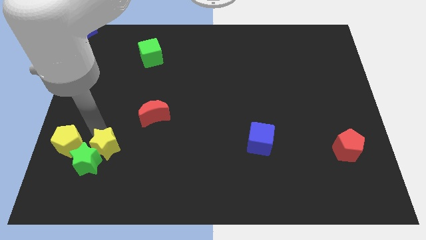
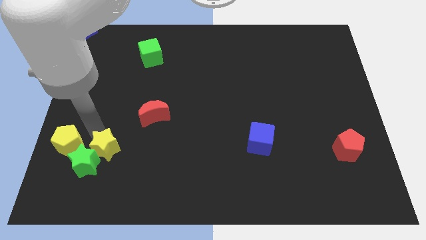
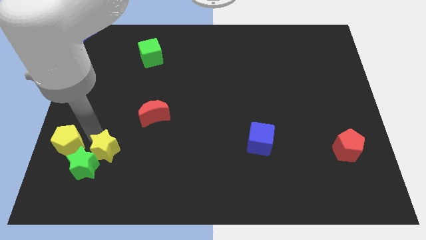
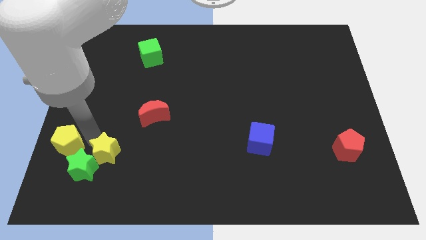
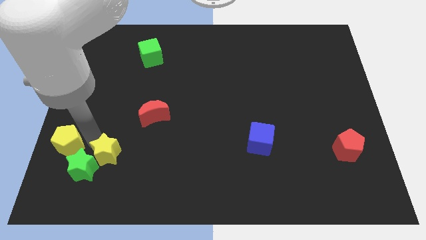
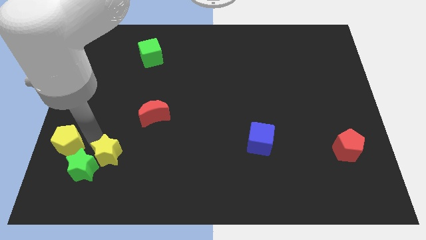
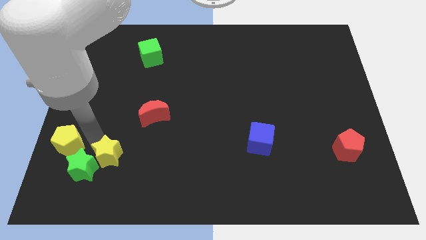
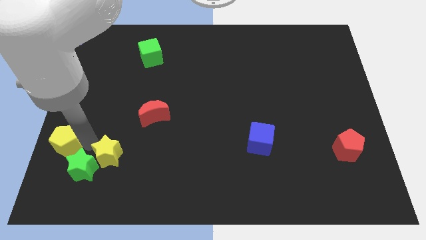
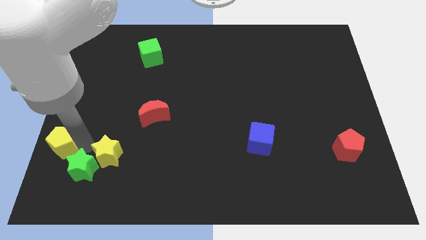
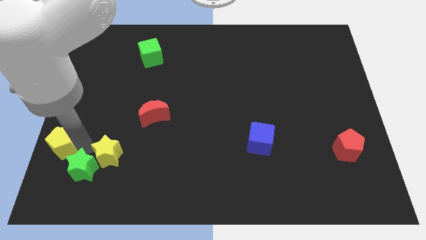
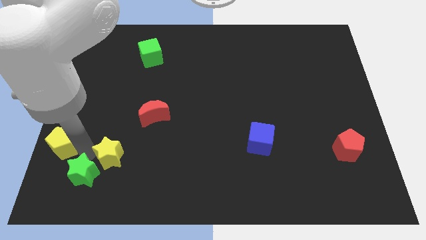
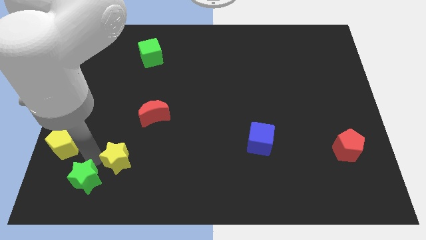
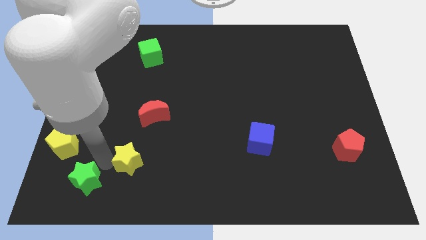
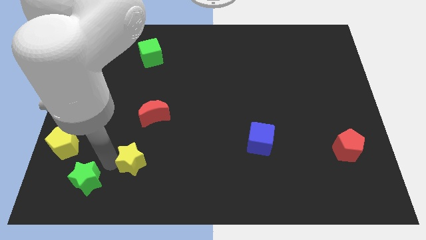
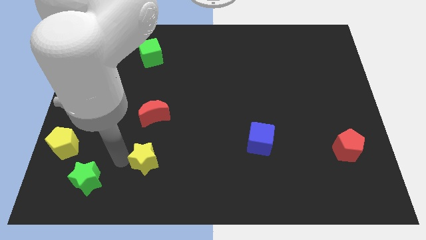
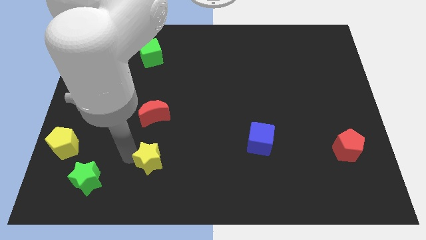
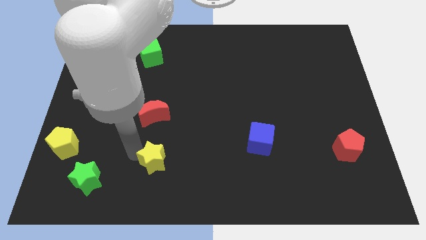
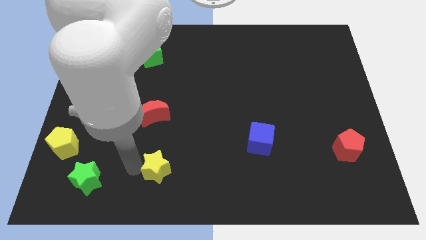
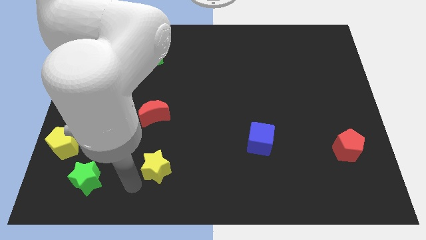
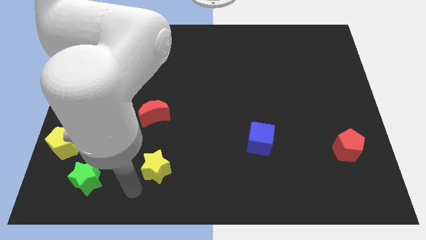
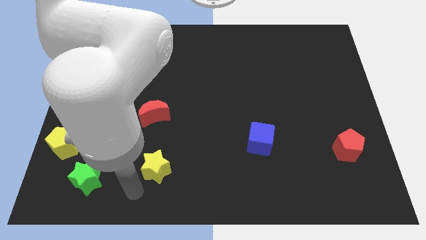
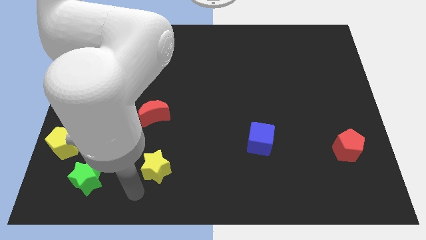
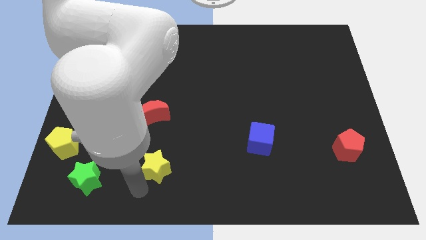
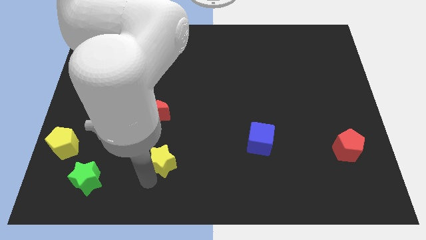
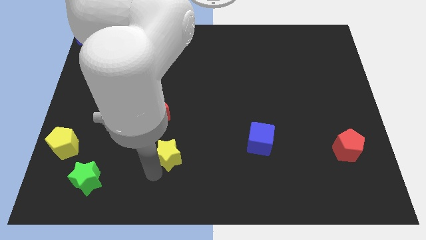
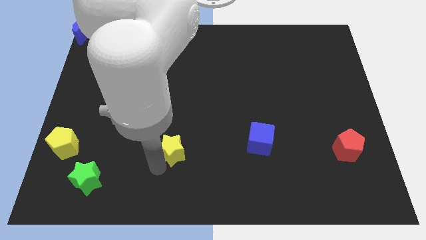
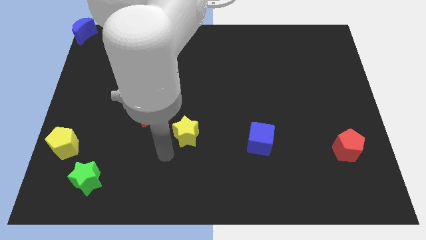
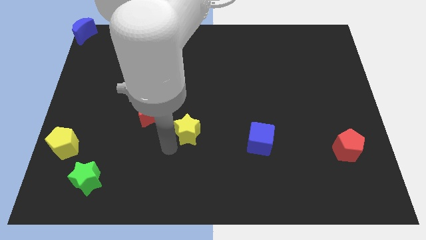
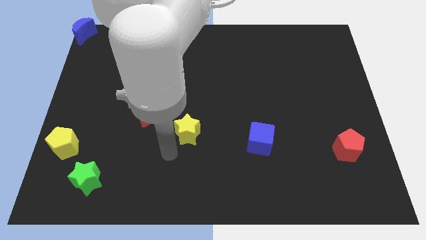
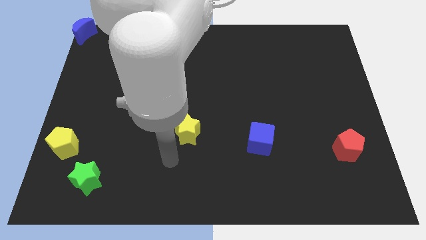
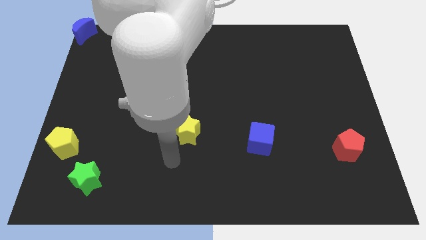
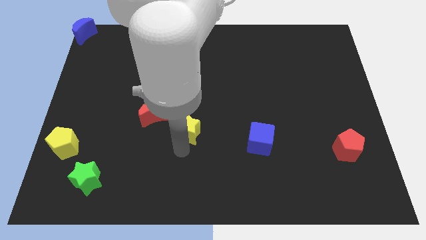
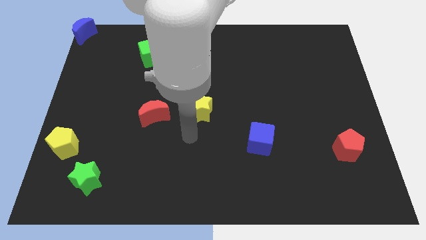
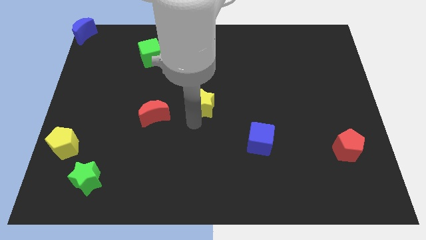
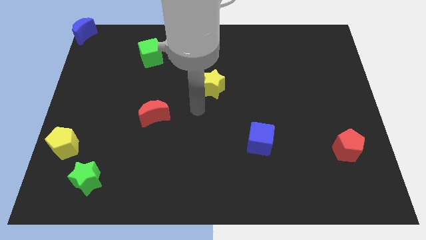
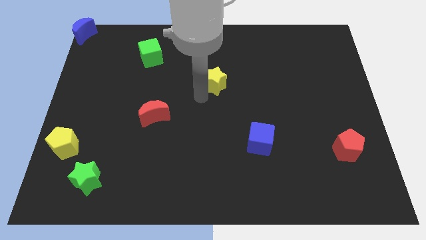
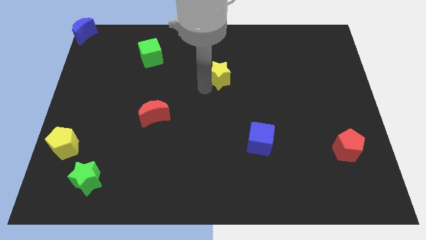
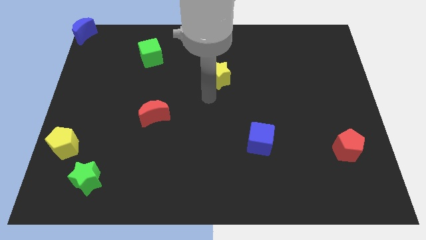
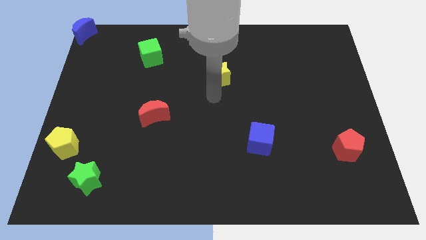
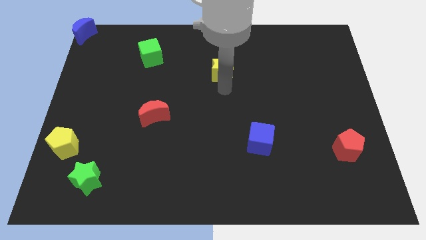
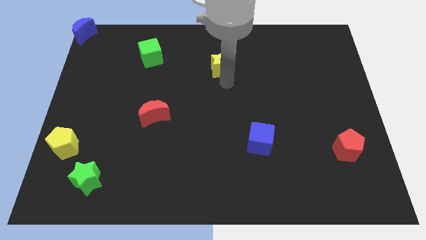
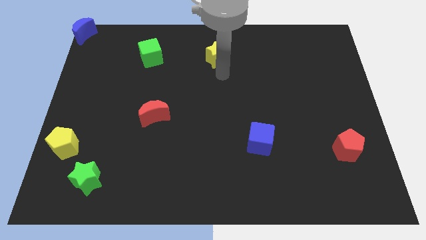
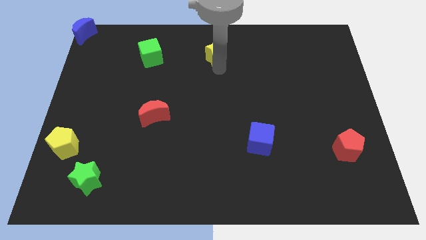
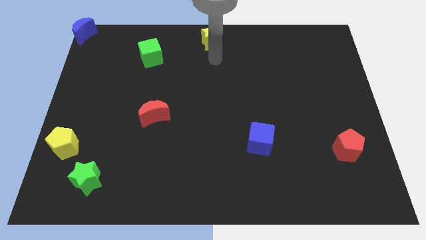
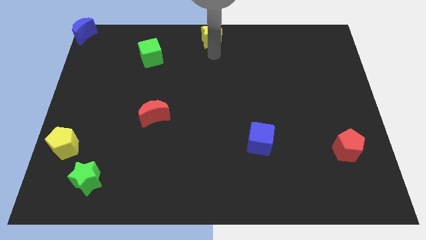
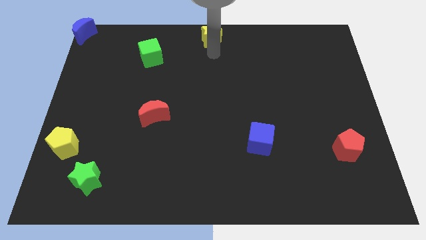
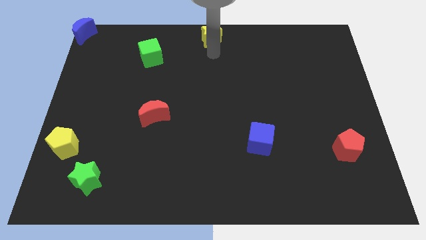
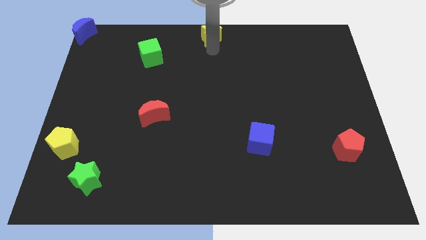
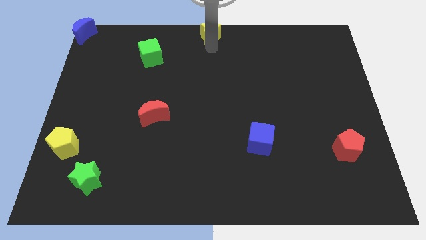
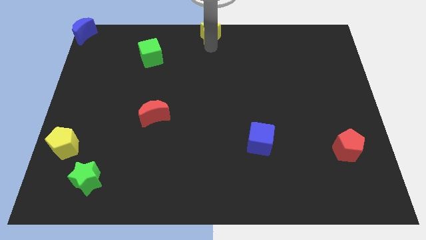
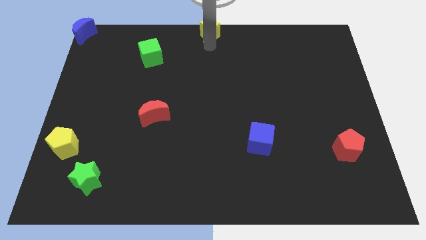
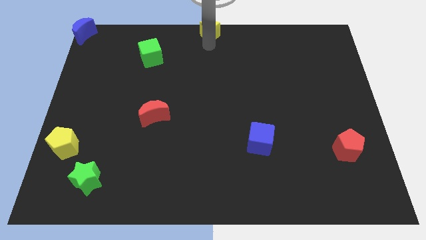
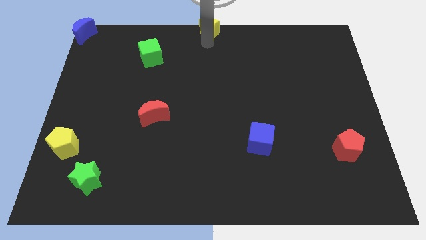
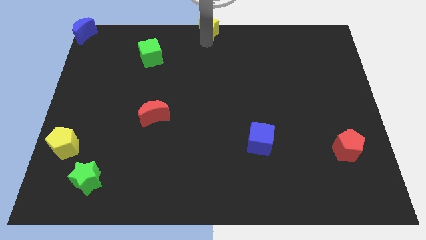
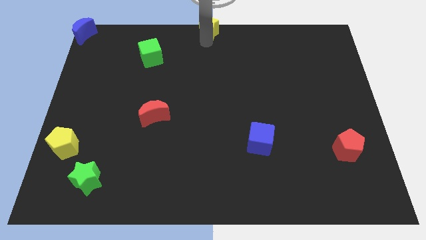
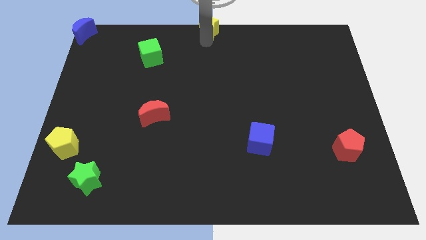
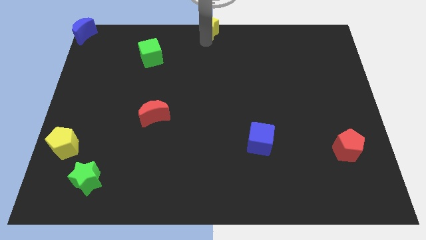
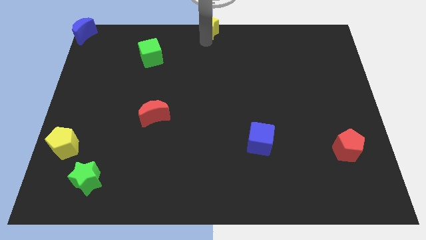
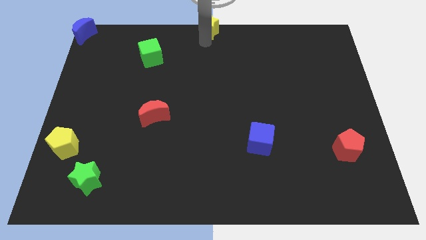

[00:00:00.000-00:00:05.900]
push the yellow star to the top center of the board

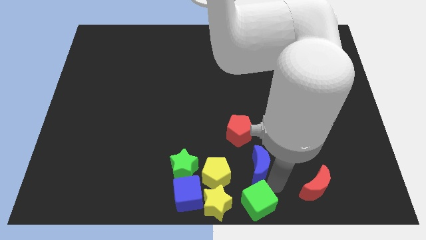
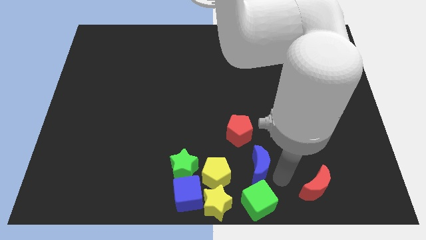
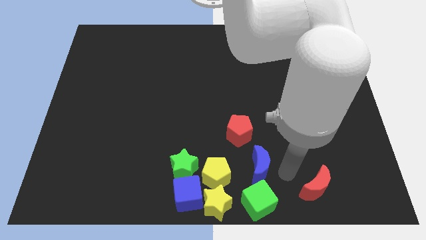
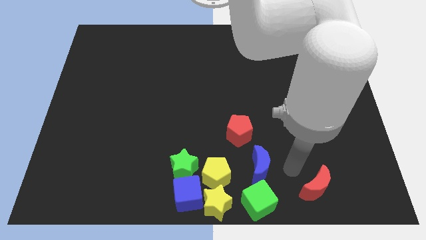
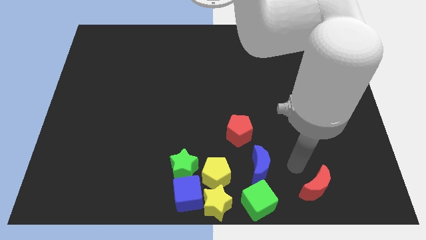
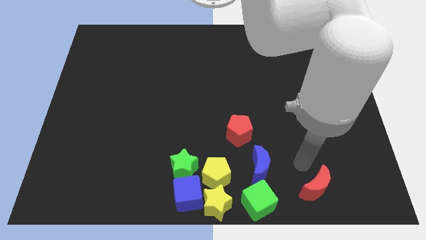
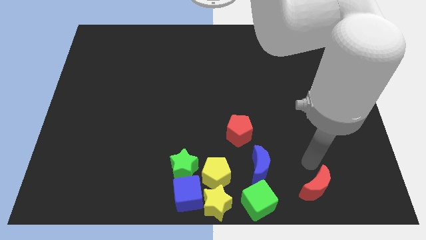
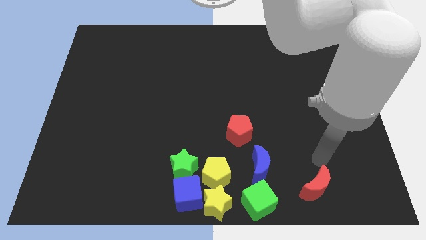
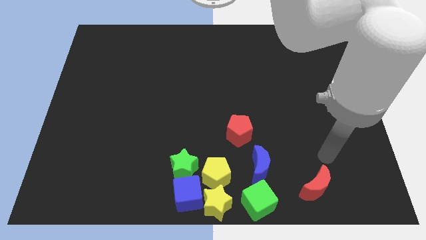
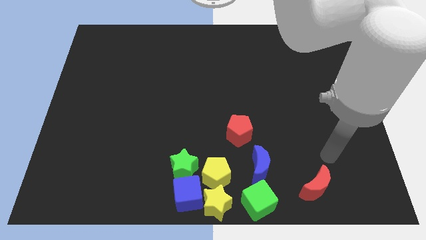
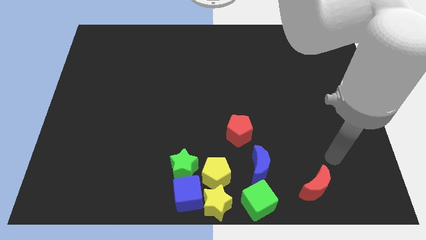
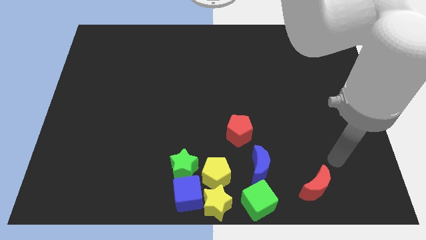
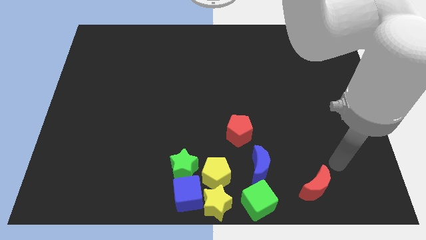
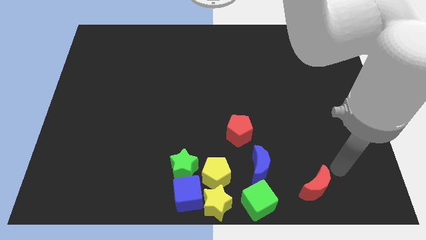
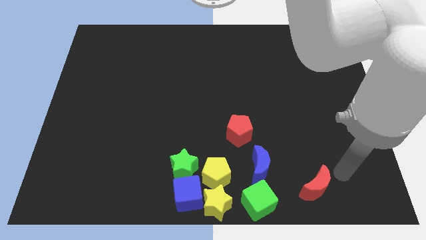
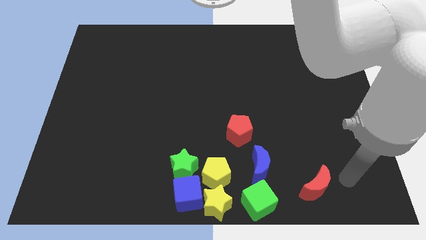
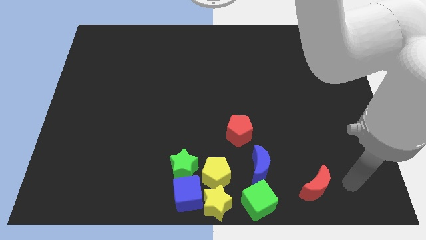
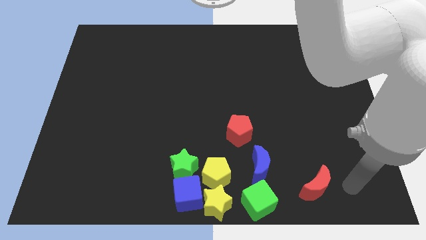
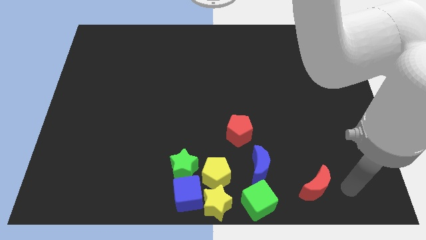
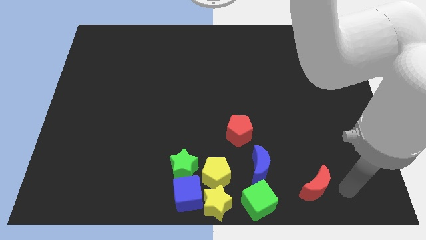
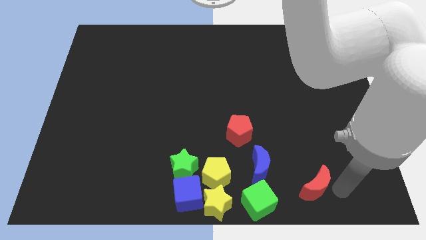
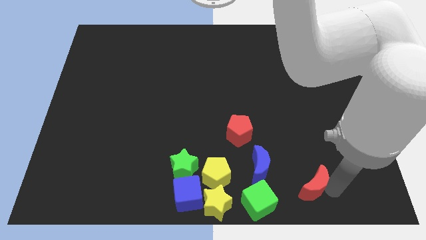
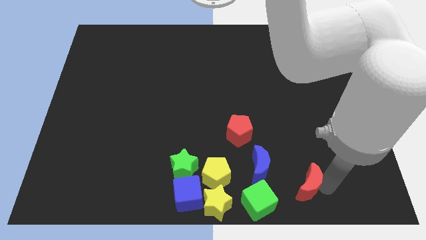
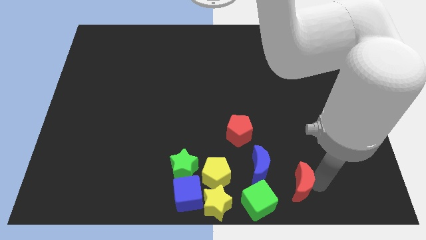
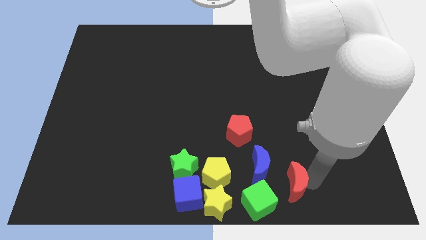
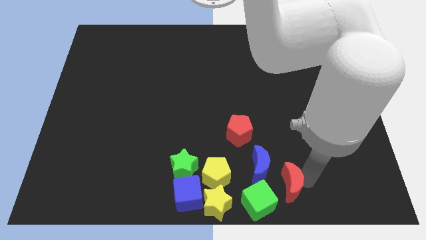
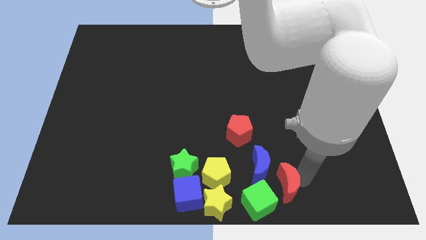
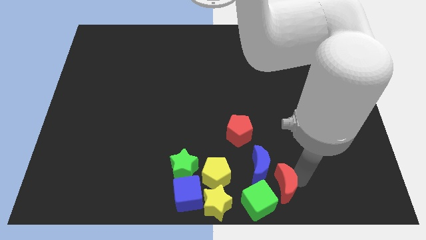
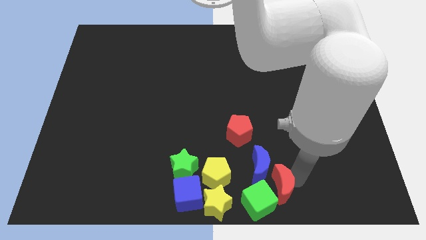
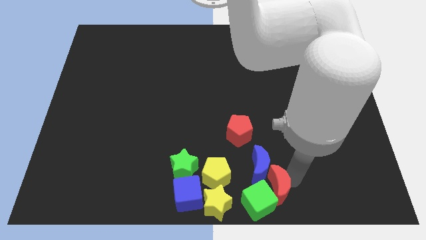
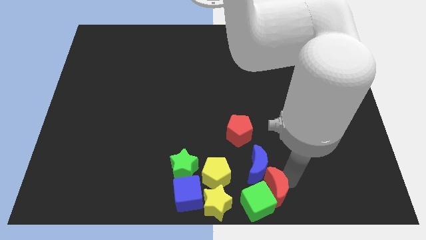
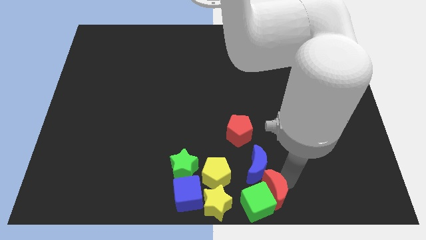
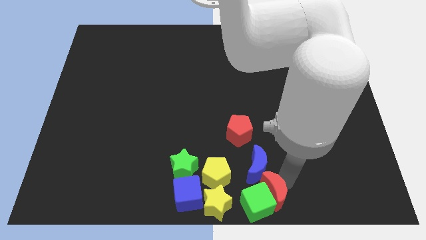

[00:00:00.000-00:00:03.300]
push the red moon into the green cube
